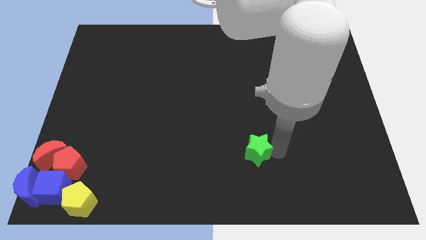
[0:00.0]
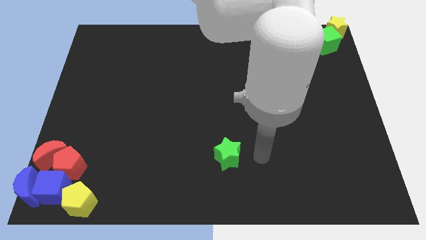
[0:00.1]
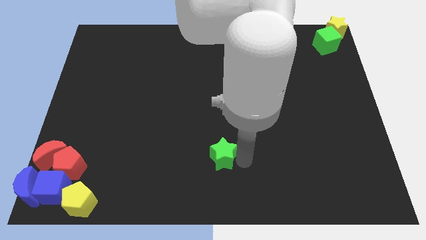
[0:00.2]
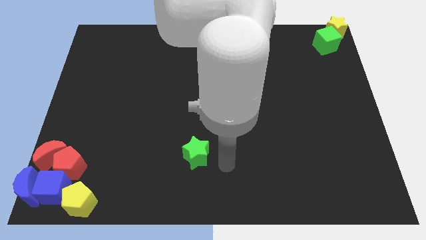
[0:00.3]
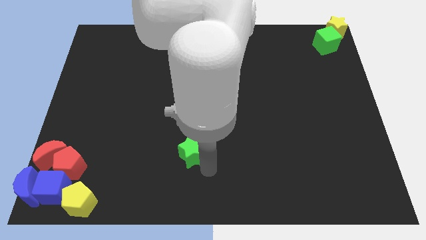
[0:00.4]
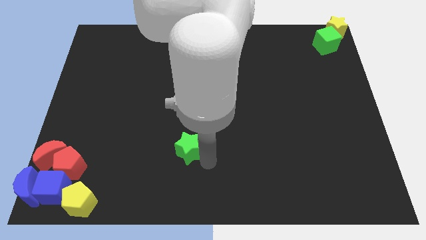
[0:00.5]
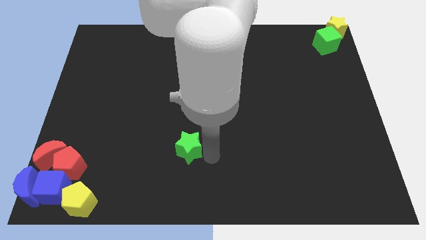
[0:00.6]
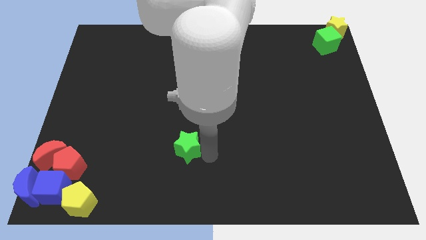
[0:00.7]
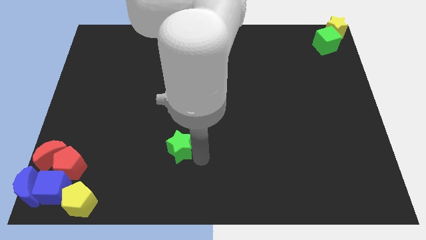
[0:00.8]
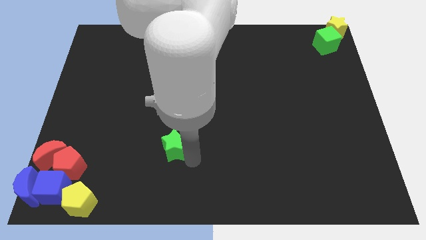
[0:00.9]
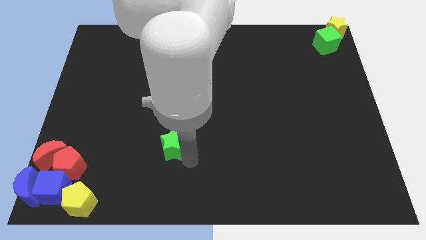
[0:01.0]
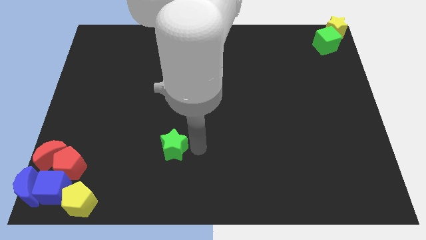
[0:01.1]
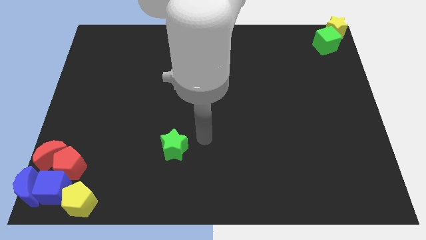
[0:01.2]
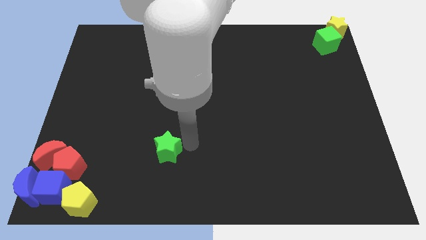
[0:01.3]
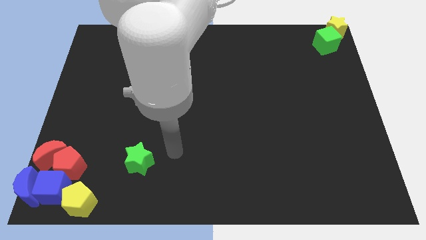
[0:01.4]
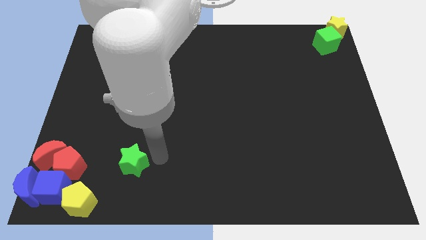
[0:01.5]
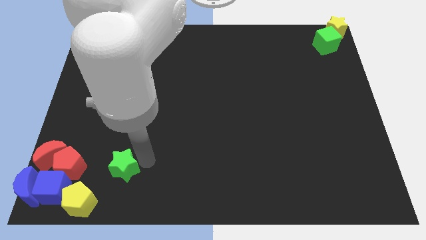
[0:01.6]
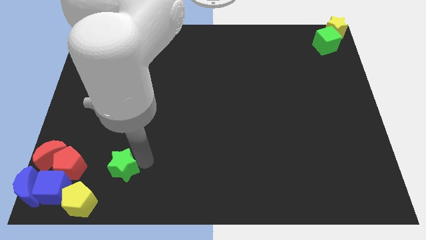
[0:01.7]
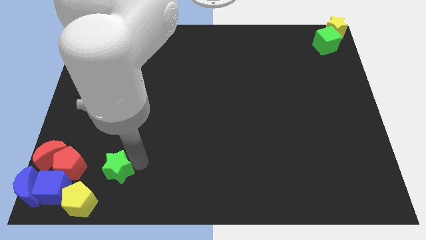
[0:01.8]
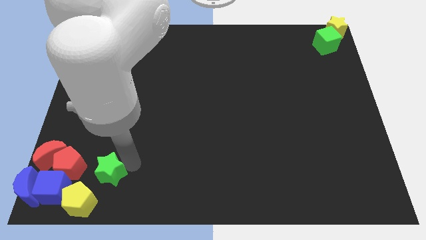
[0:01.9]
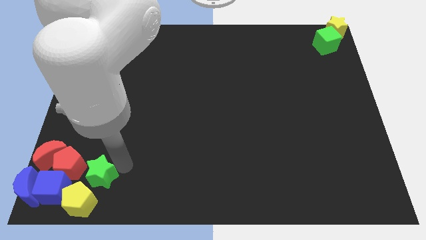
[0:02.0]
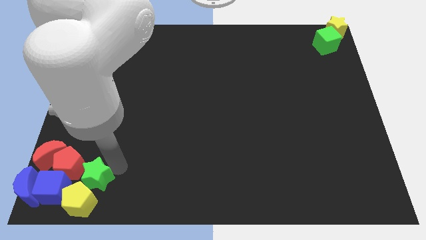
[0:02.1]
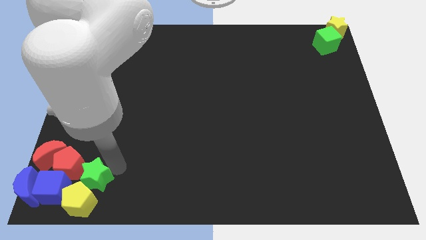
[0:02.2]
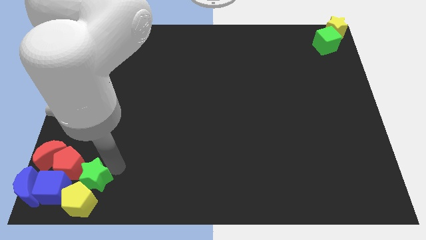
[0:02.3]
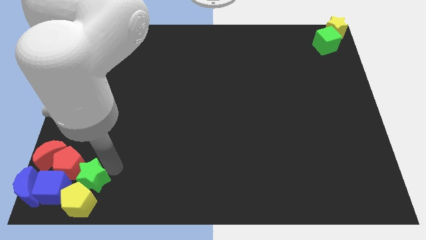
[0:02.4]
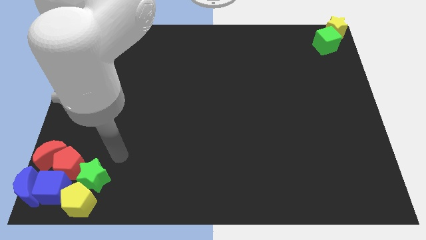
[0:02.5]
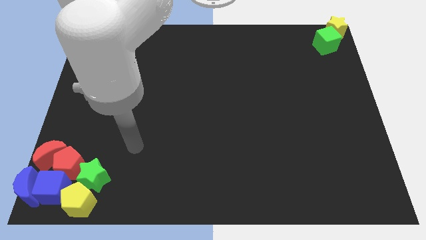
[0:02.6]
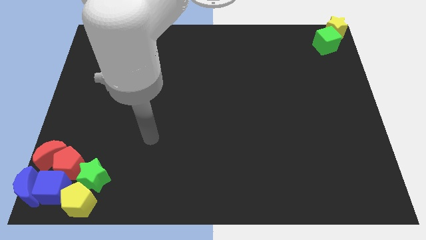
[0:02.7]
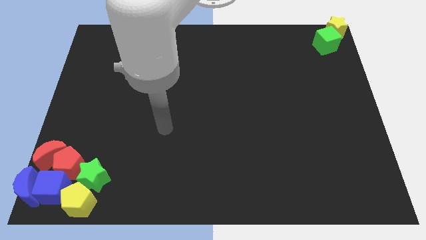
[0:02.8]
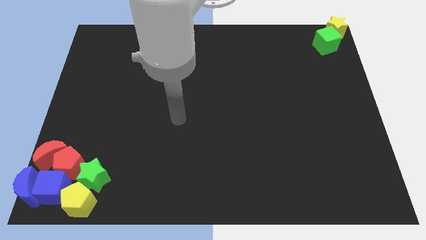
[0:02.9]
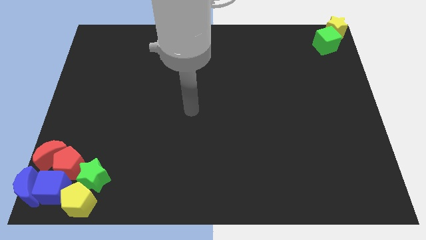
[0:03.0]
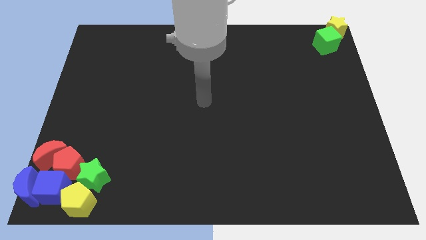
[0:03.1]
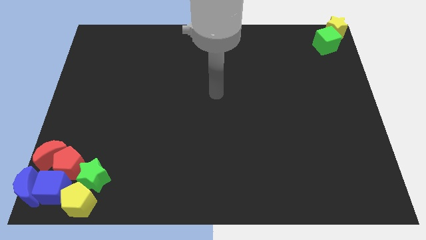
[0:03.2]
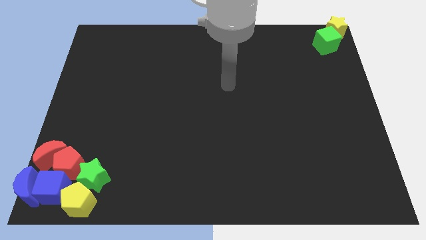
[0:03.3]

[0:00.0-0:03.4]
move your arm towards the center of the board

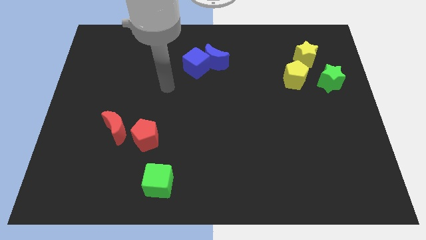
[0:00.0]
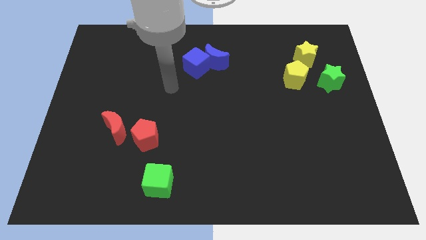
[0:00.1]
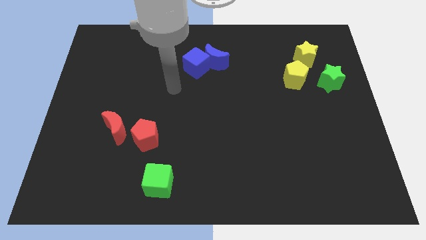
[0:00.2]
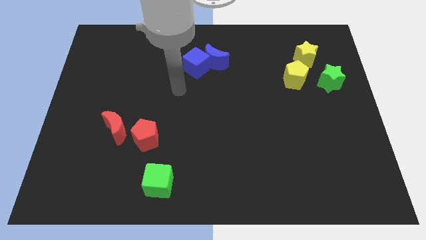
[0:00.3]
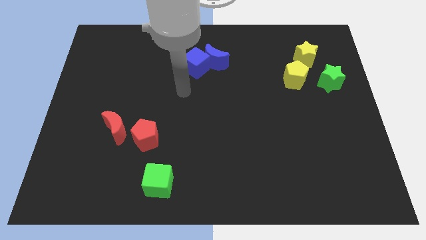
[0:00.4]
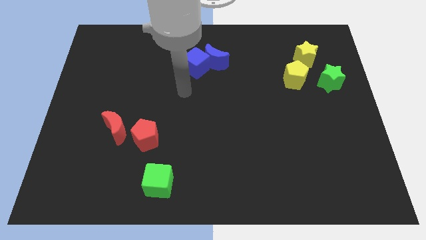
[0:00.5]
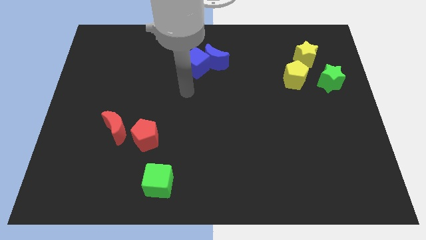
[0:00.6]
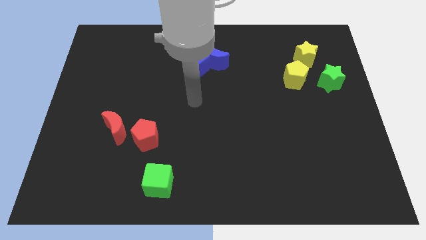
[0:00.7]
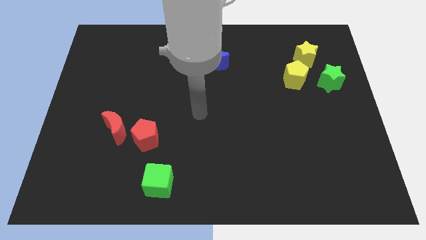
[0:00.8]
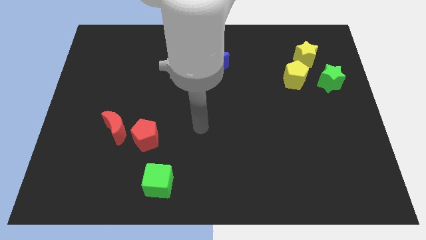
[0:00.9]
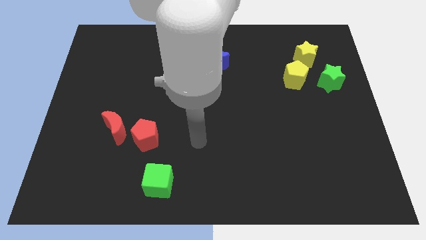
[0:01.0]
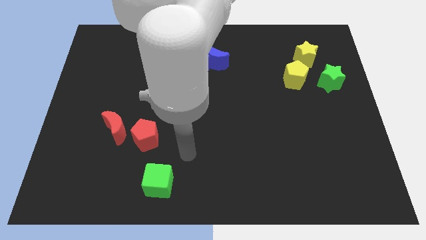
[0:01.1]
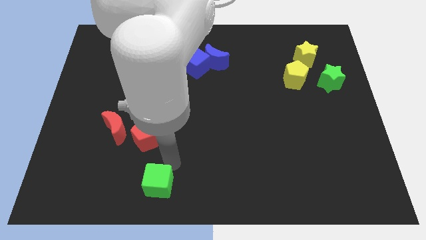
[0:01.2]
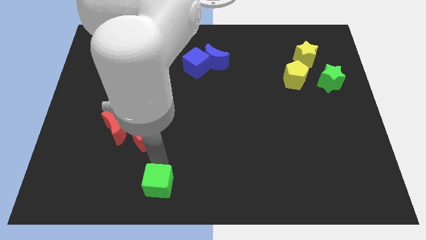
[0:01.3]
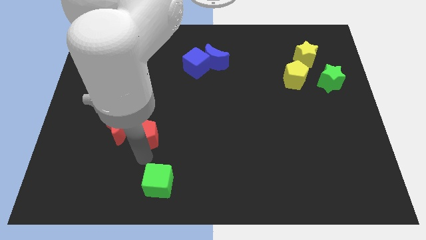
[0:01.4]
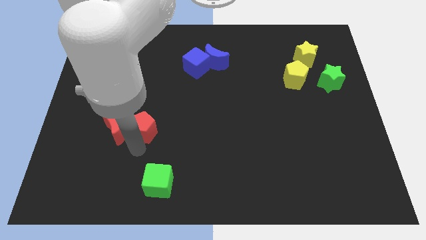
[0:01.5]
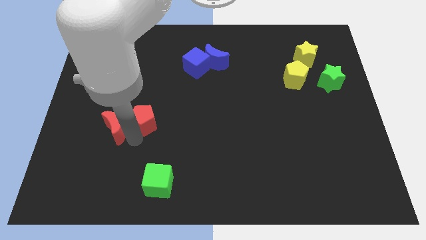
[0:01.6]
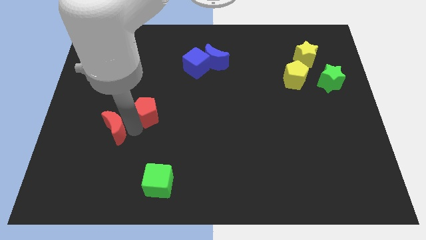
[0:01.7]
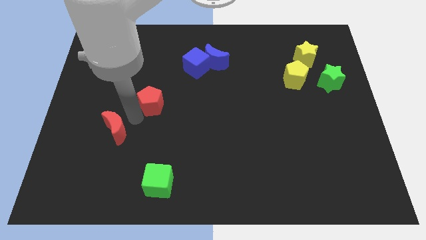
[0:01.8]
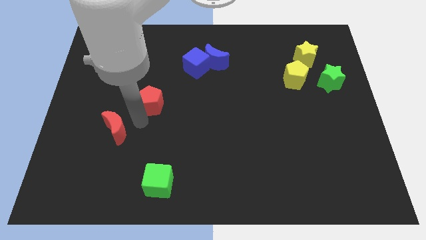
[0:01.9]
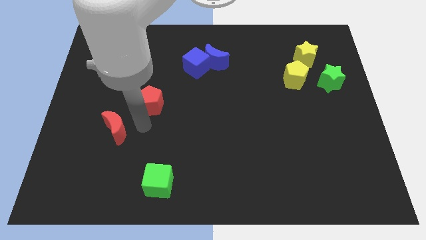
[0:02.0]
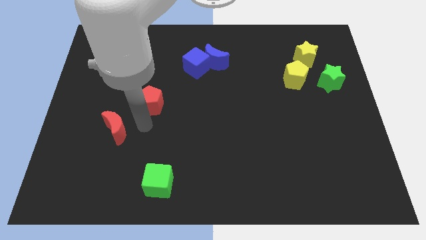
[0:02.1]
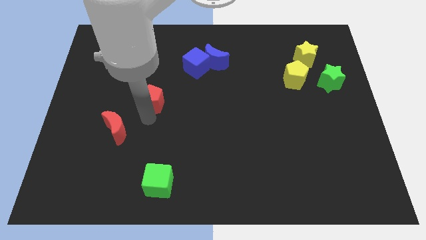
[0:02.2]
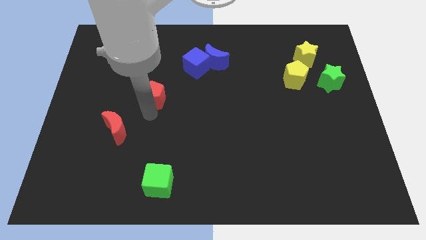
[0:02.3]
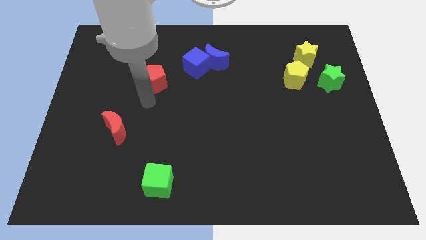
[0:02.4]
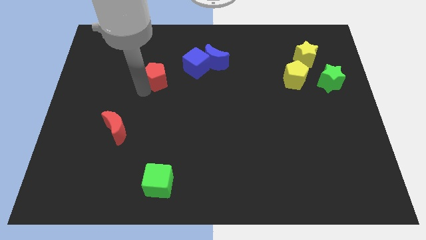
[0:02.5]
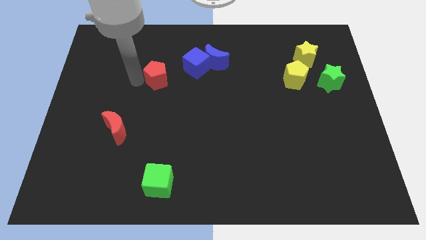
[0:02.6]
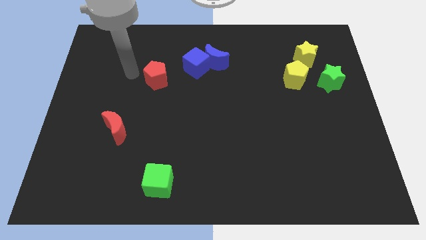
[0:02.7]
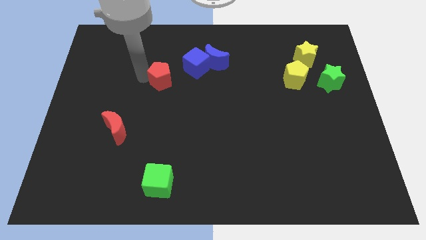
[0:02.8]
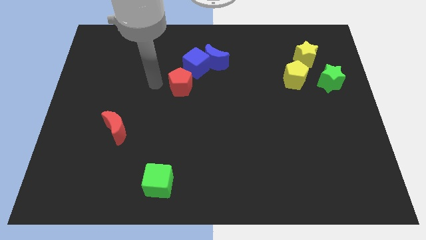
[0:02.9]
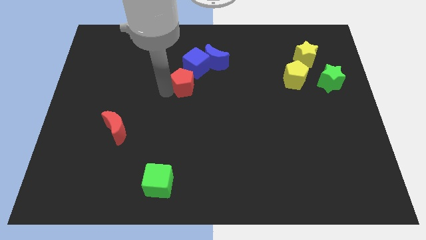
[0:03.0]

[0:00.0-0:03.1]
place the red pentagon beside the blue cube

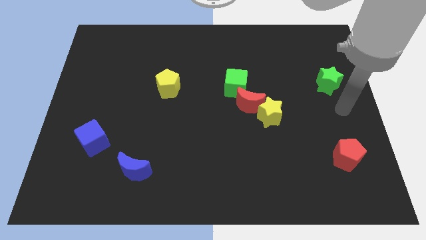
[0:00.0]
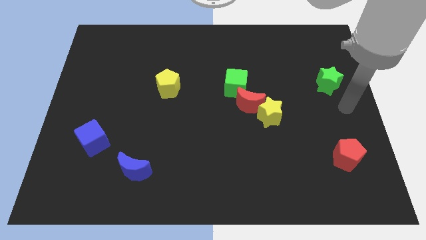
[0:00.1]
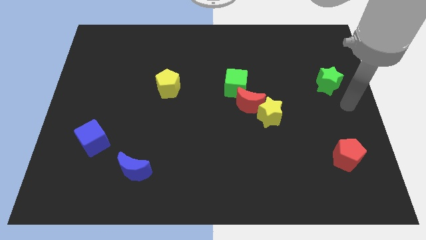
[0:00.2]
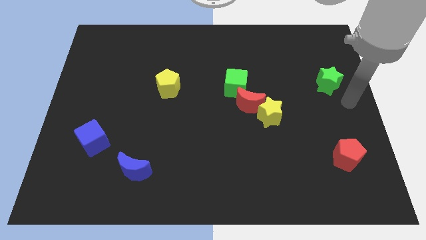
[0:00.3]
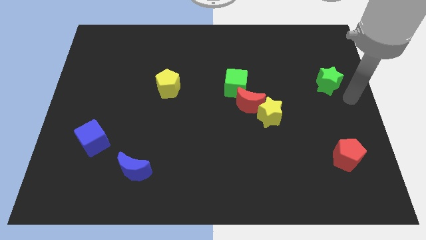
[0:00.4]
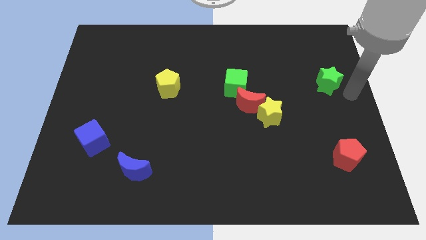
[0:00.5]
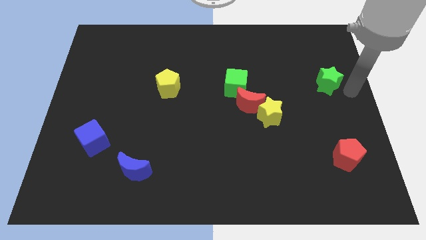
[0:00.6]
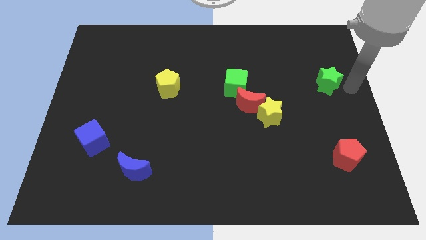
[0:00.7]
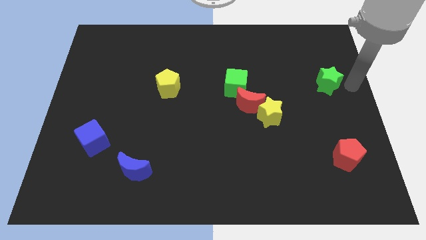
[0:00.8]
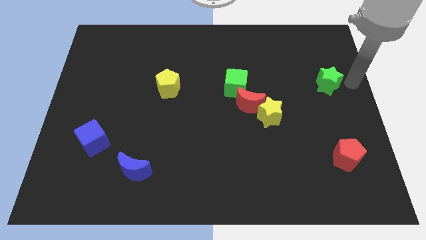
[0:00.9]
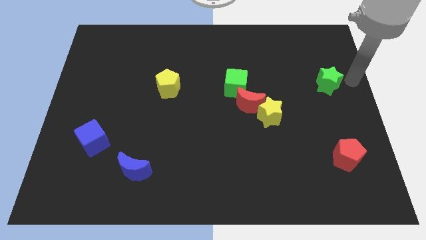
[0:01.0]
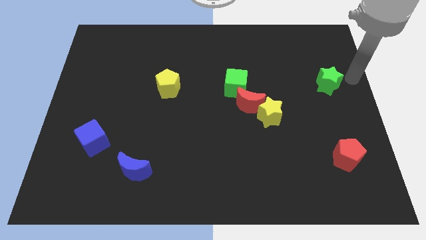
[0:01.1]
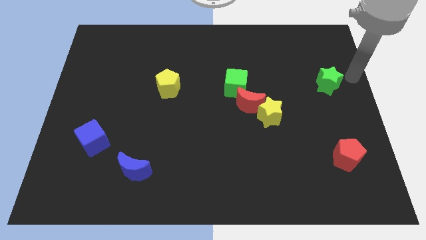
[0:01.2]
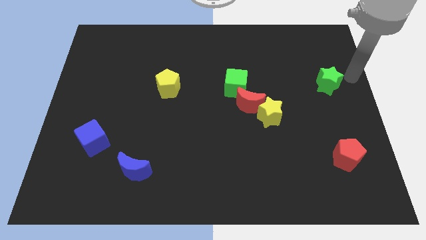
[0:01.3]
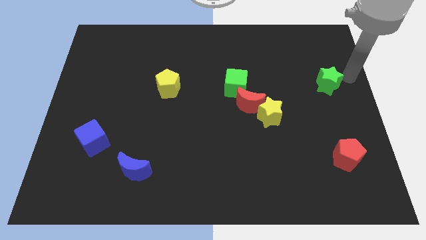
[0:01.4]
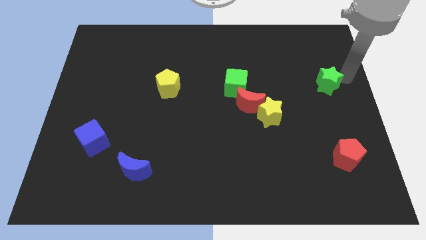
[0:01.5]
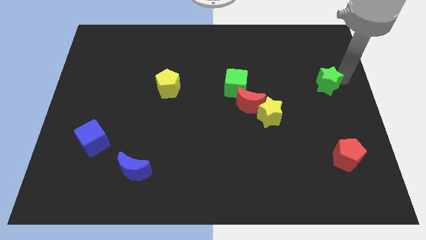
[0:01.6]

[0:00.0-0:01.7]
point your hand at the top right side of the green star

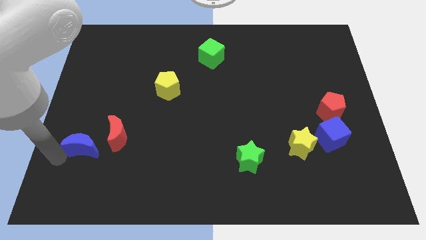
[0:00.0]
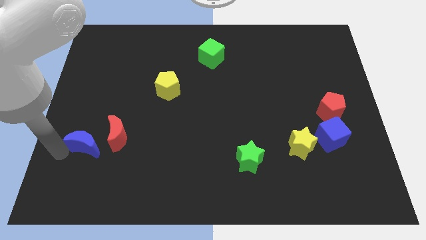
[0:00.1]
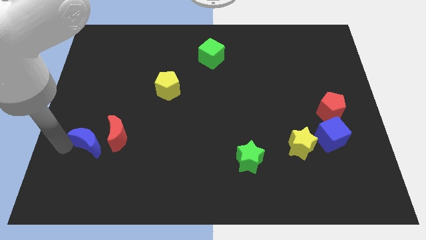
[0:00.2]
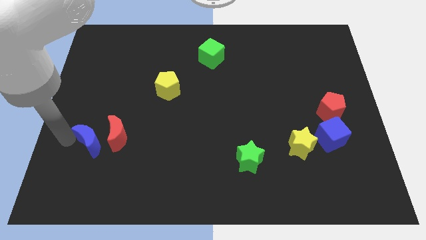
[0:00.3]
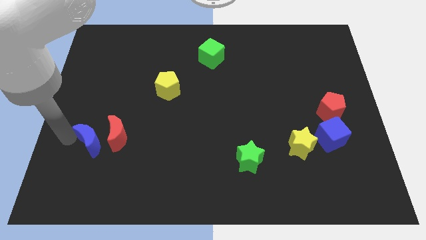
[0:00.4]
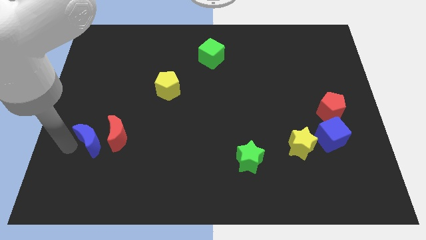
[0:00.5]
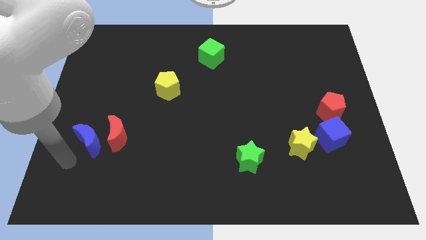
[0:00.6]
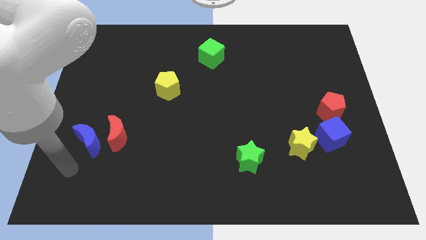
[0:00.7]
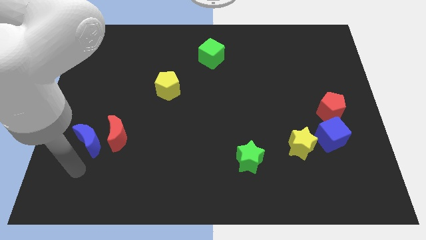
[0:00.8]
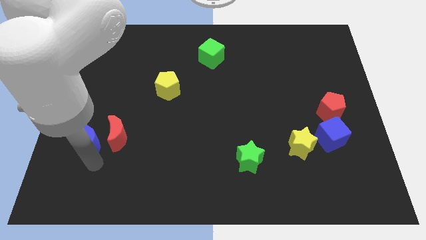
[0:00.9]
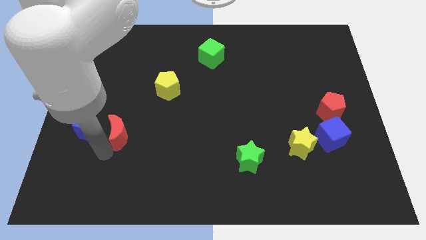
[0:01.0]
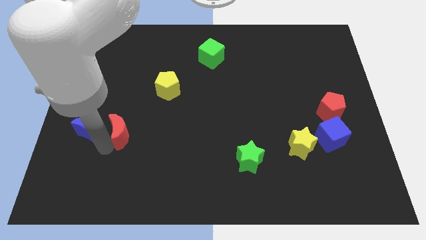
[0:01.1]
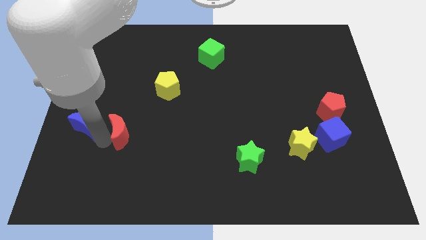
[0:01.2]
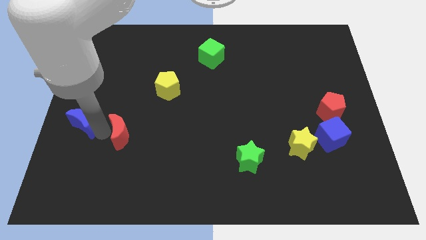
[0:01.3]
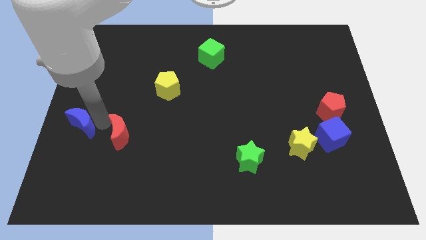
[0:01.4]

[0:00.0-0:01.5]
push the blue crescent slightly to the center left of the table
